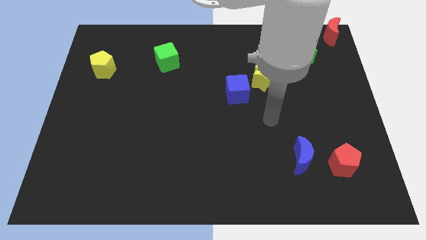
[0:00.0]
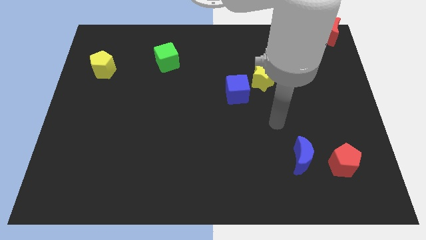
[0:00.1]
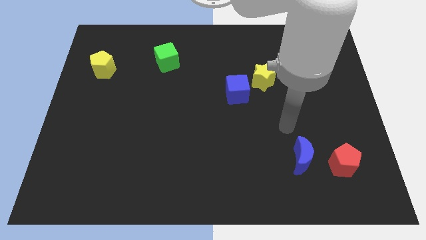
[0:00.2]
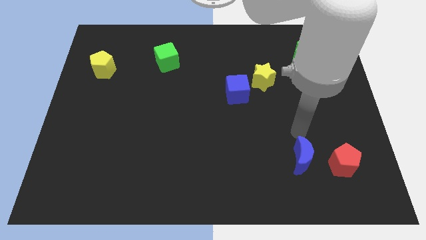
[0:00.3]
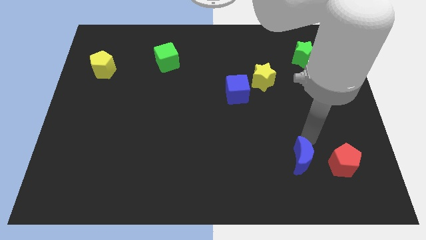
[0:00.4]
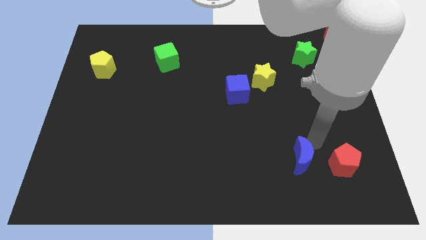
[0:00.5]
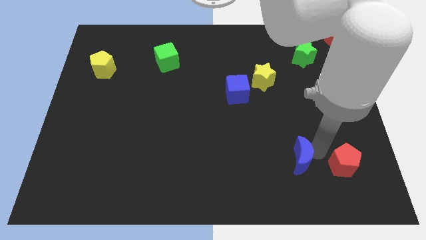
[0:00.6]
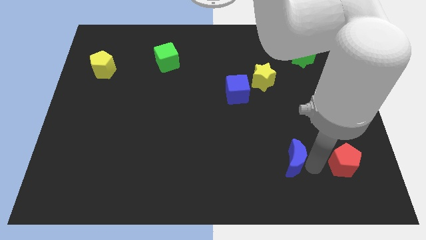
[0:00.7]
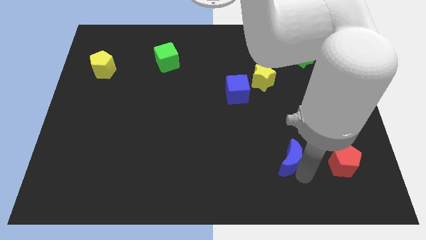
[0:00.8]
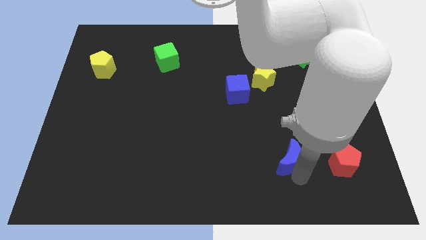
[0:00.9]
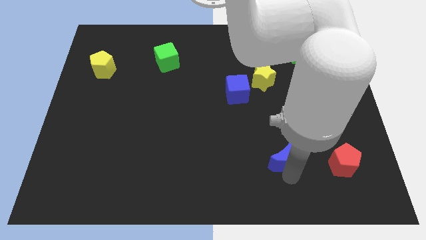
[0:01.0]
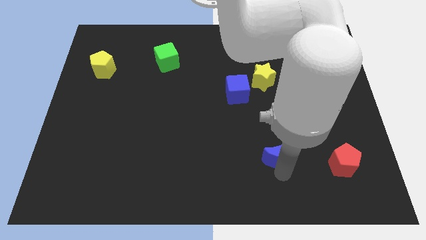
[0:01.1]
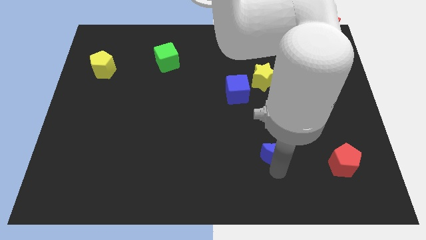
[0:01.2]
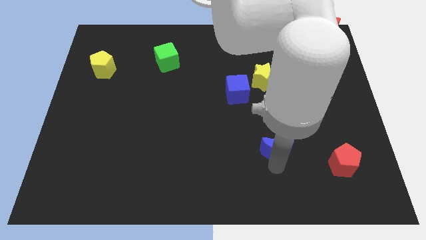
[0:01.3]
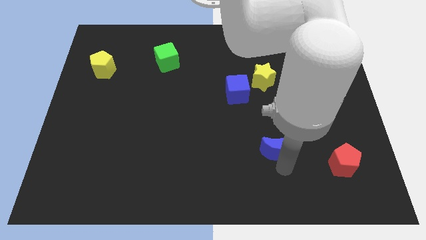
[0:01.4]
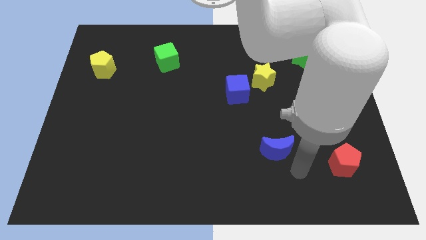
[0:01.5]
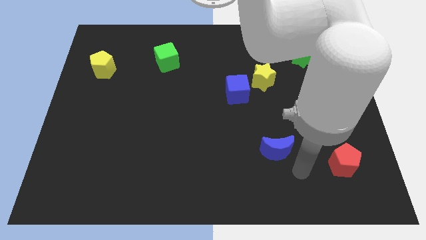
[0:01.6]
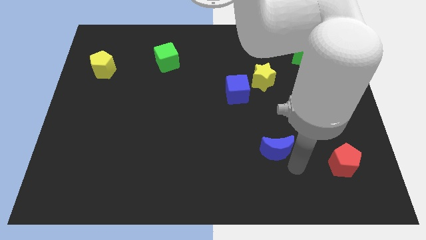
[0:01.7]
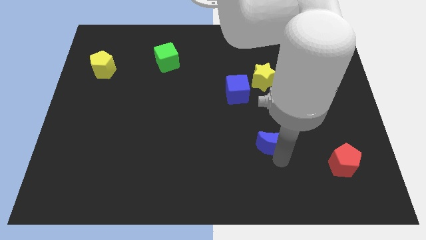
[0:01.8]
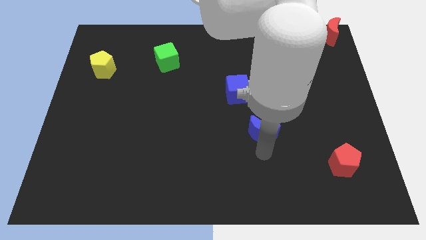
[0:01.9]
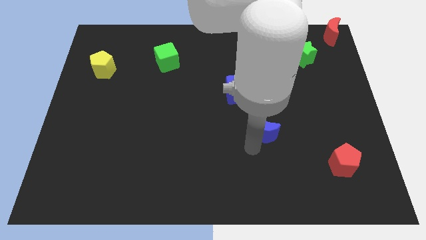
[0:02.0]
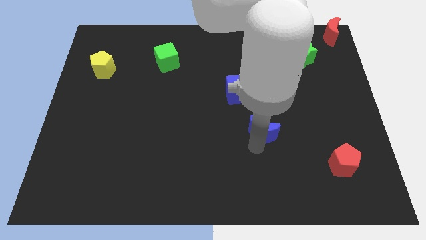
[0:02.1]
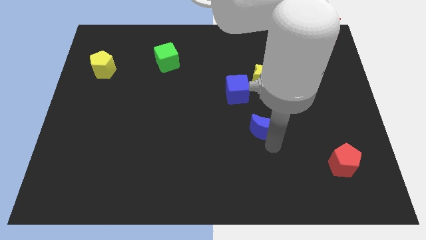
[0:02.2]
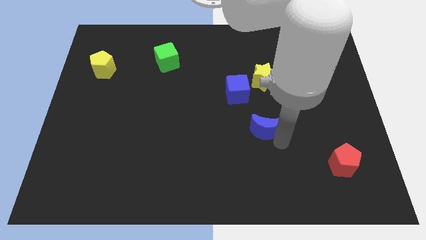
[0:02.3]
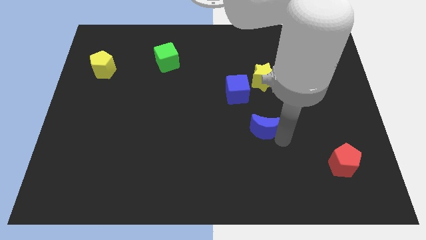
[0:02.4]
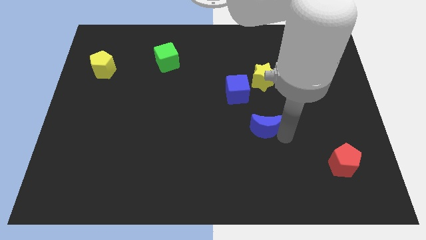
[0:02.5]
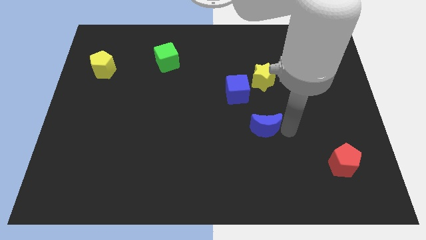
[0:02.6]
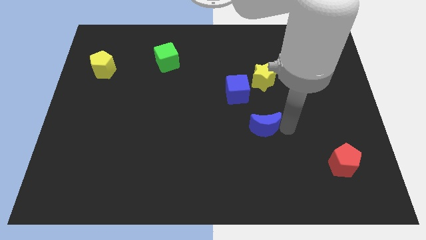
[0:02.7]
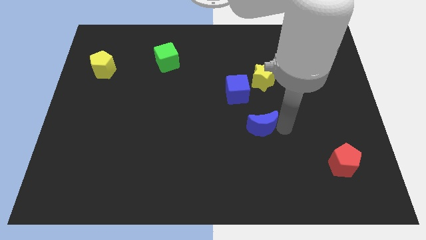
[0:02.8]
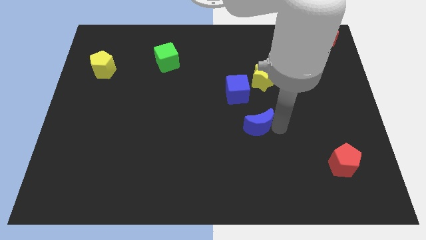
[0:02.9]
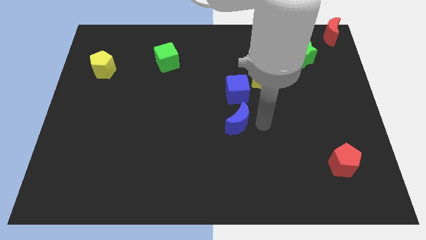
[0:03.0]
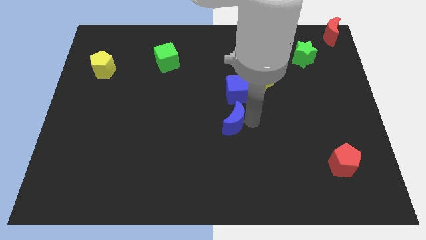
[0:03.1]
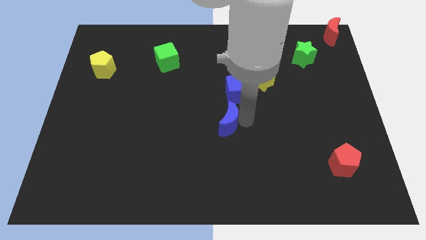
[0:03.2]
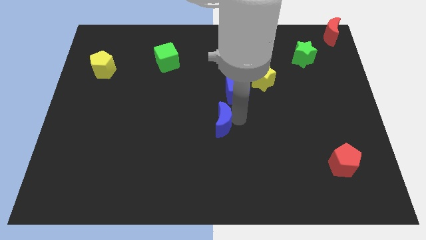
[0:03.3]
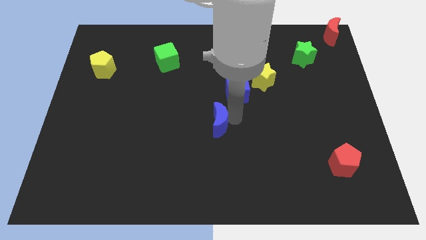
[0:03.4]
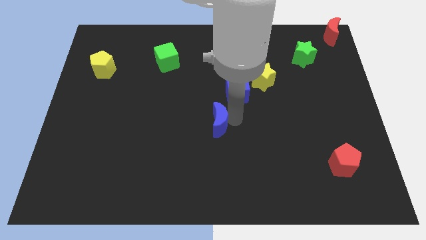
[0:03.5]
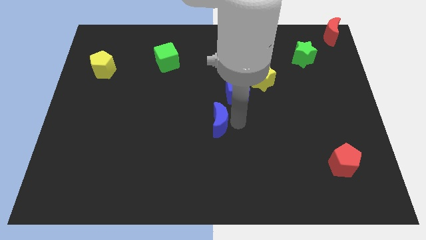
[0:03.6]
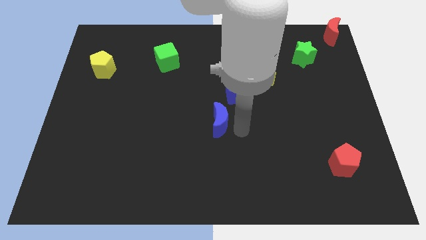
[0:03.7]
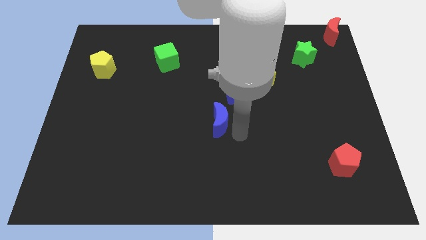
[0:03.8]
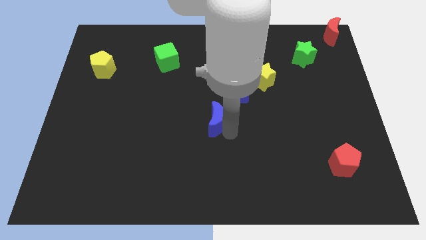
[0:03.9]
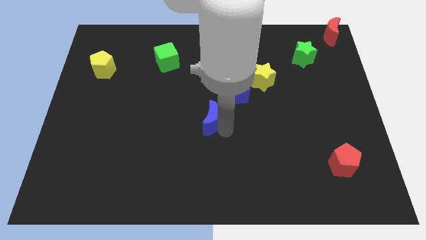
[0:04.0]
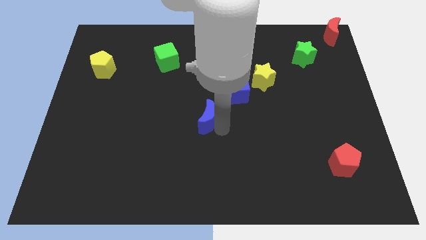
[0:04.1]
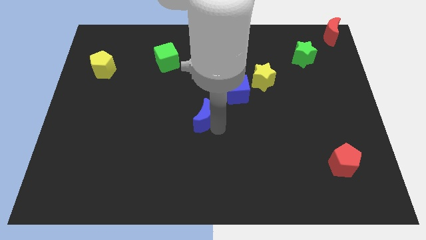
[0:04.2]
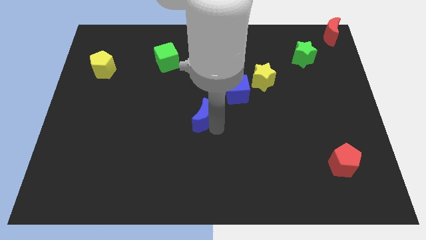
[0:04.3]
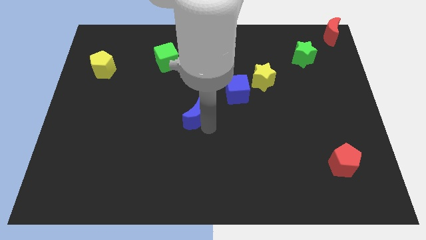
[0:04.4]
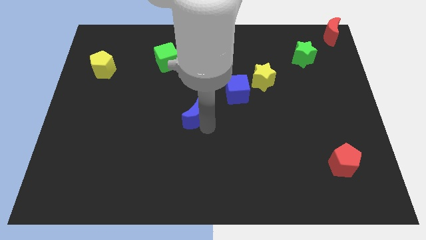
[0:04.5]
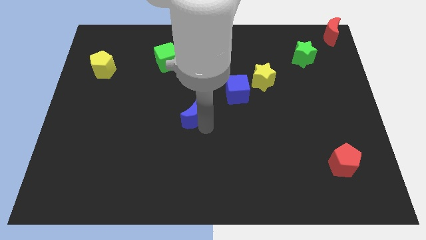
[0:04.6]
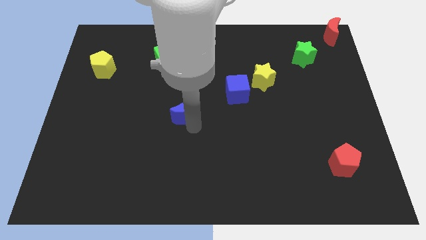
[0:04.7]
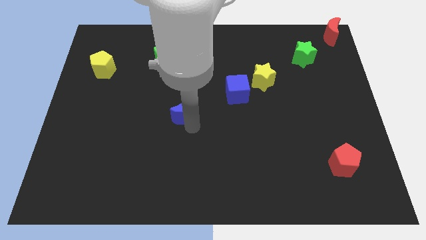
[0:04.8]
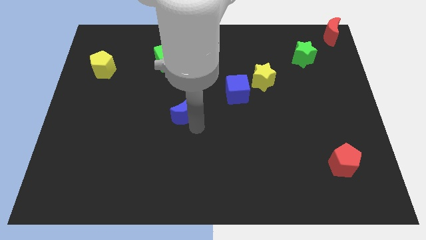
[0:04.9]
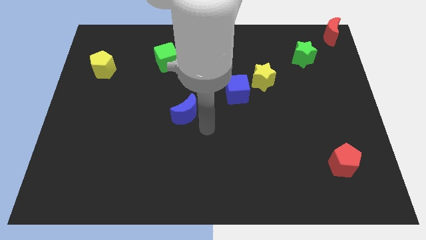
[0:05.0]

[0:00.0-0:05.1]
move the blue crescent towards the left of the board

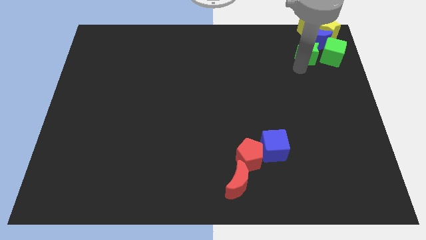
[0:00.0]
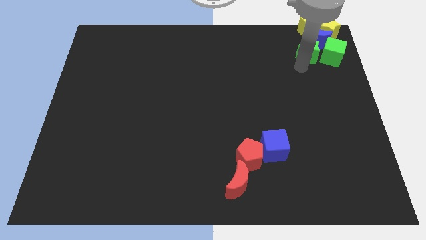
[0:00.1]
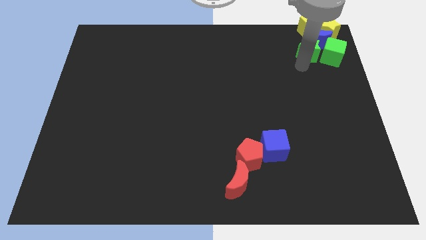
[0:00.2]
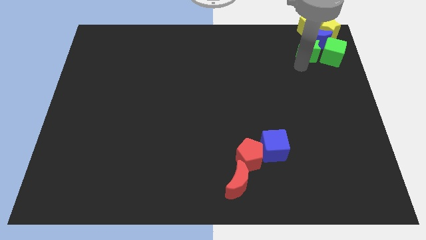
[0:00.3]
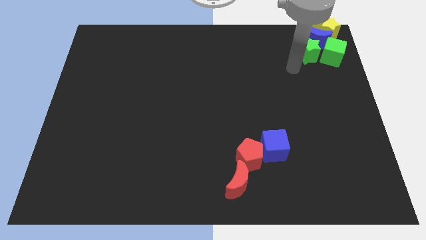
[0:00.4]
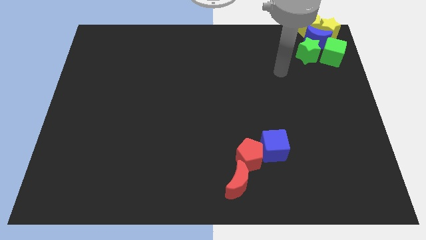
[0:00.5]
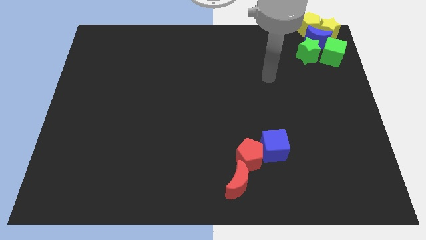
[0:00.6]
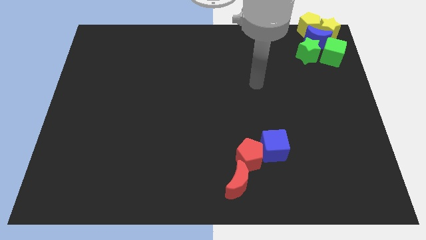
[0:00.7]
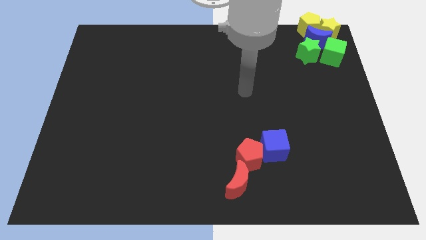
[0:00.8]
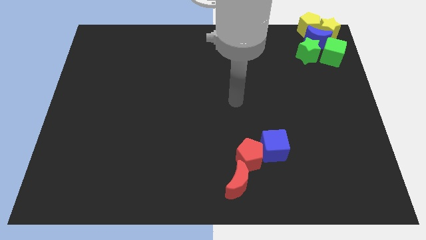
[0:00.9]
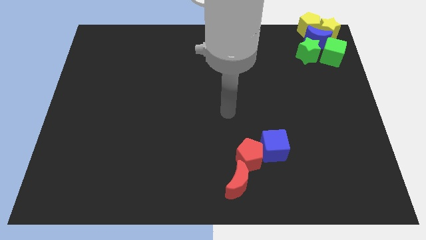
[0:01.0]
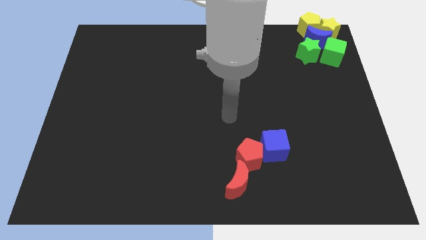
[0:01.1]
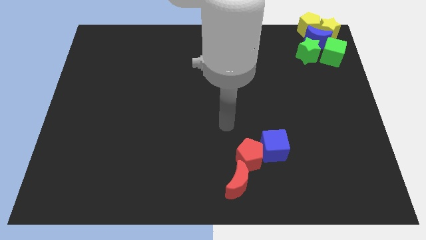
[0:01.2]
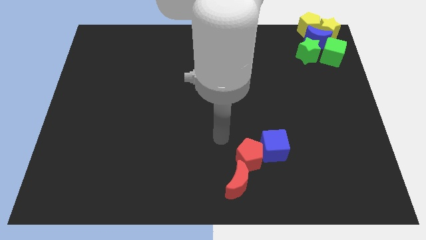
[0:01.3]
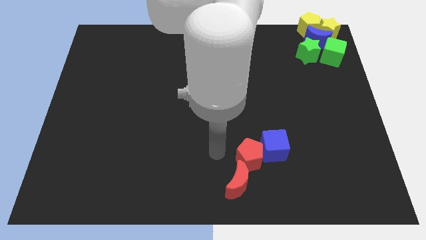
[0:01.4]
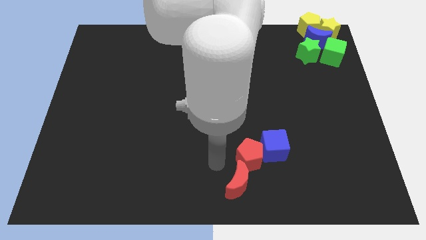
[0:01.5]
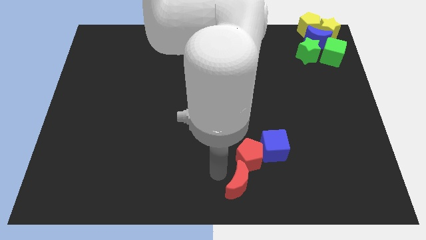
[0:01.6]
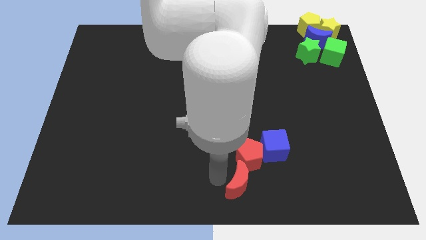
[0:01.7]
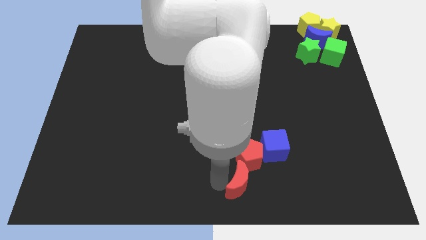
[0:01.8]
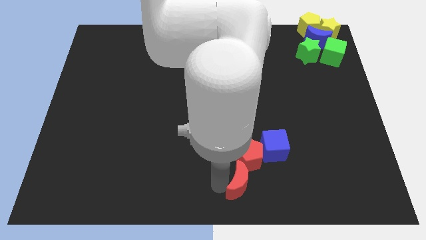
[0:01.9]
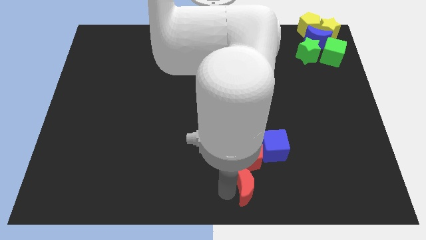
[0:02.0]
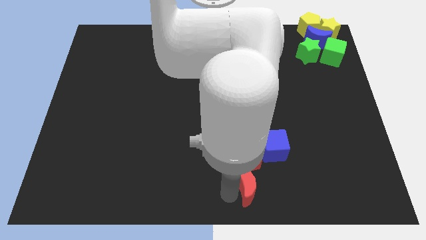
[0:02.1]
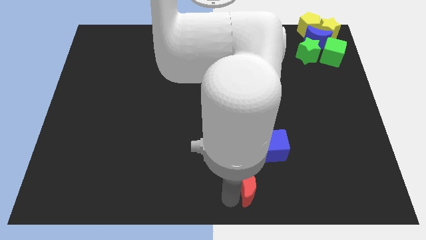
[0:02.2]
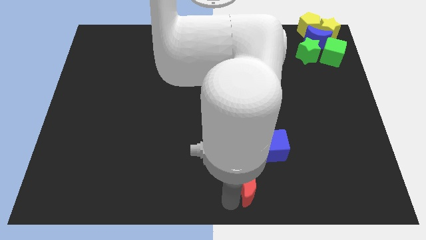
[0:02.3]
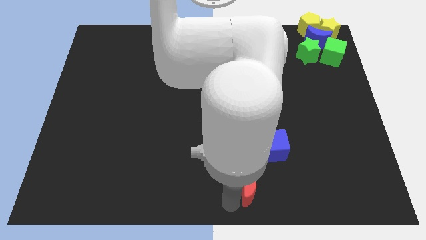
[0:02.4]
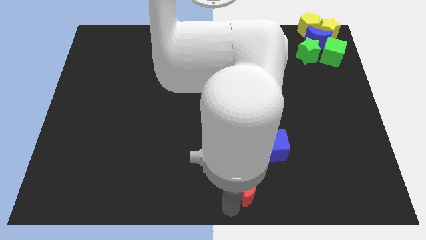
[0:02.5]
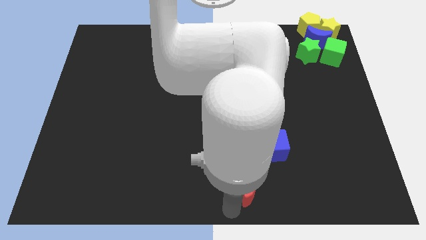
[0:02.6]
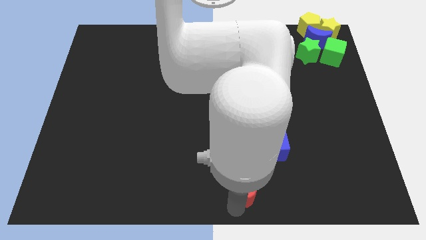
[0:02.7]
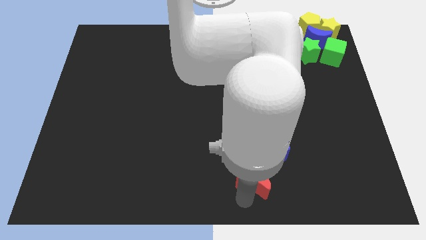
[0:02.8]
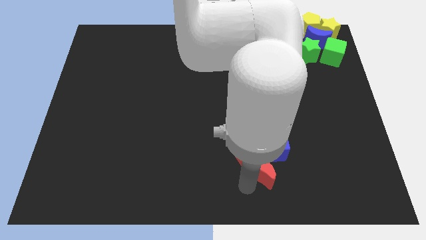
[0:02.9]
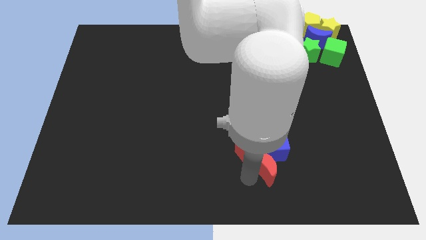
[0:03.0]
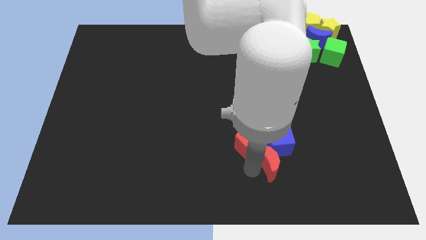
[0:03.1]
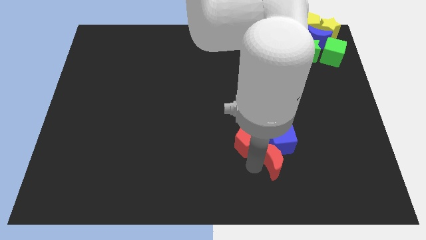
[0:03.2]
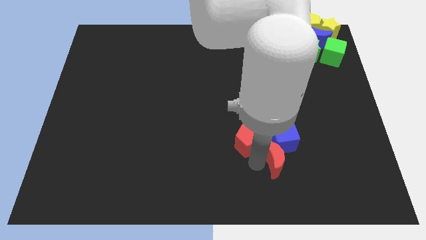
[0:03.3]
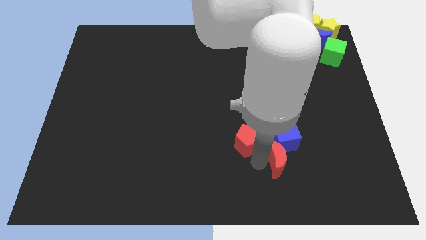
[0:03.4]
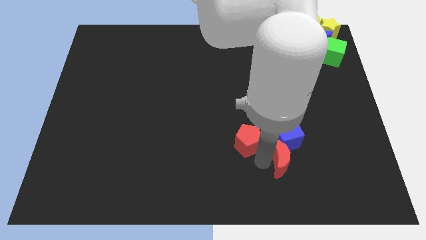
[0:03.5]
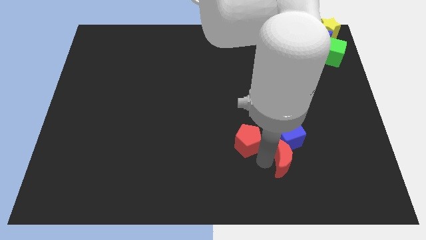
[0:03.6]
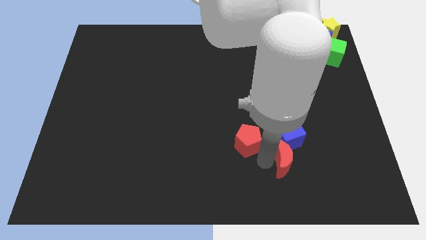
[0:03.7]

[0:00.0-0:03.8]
push red crescent into blue cube
